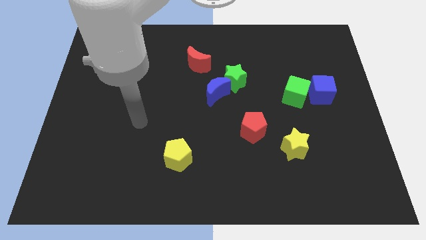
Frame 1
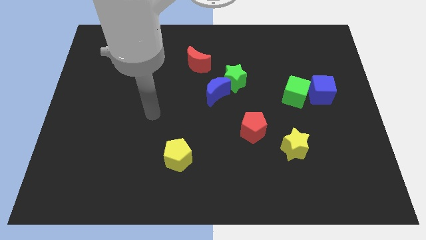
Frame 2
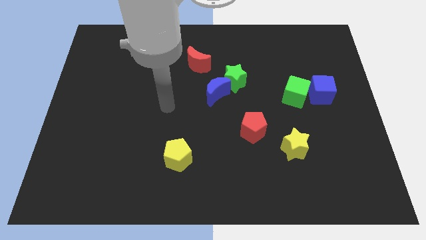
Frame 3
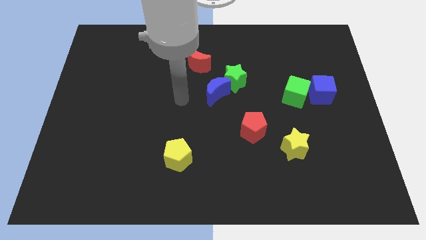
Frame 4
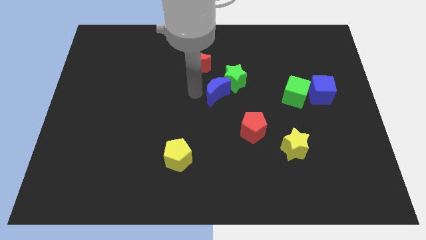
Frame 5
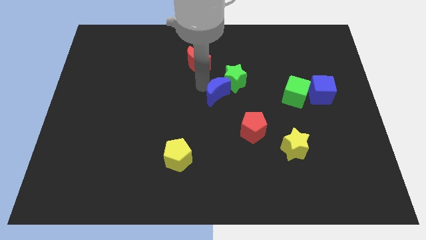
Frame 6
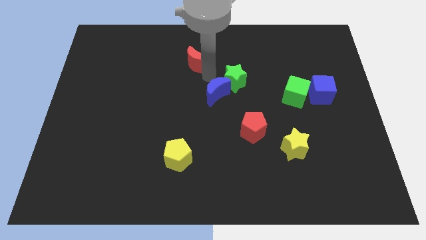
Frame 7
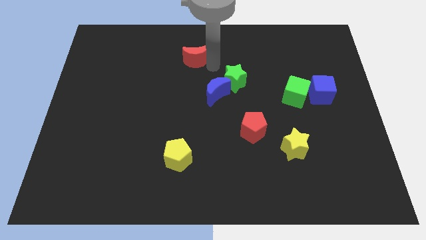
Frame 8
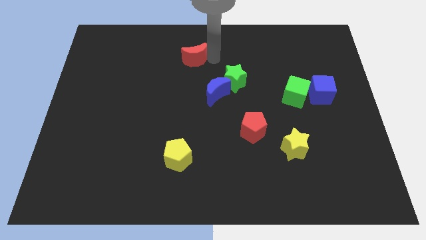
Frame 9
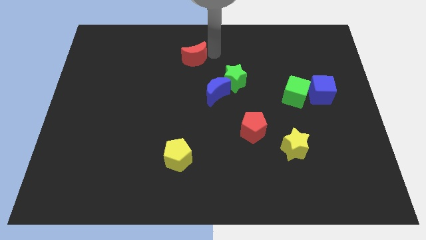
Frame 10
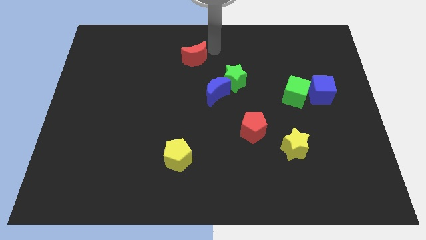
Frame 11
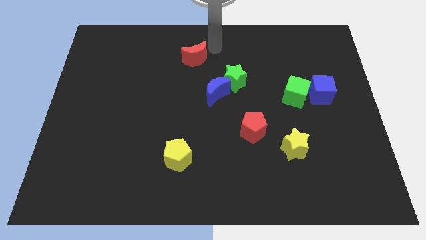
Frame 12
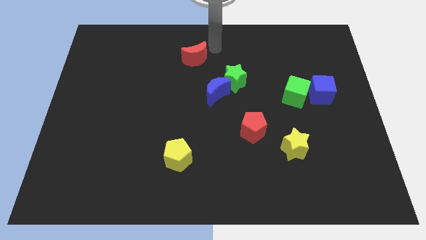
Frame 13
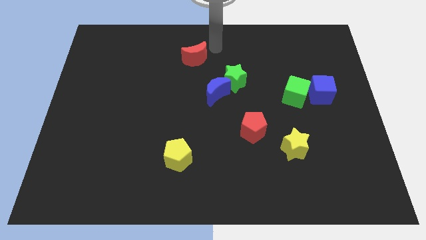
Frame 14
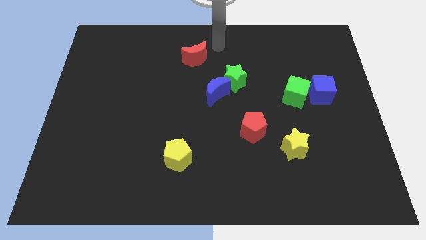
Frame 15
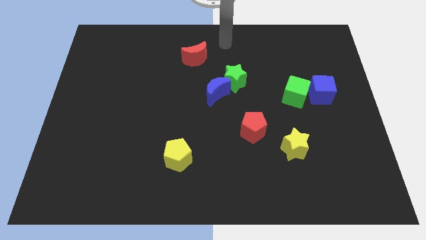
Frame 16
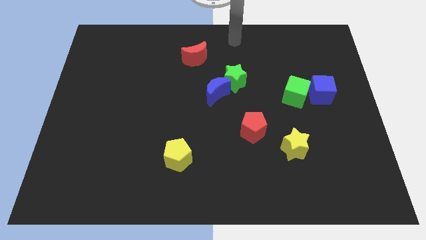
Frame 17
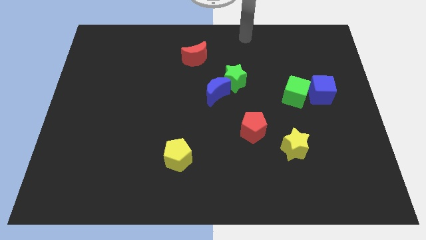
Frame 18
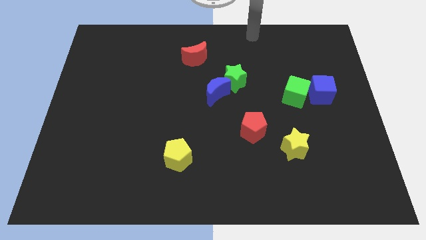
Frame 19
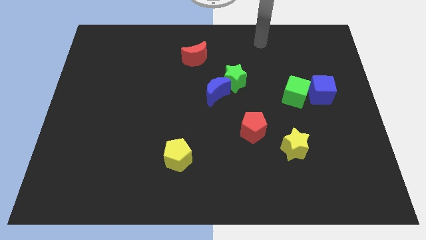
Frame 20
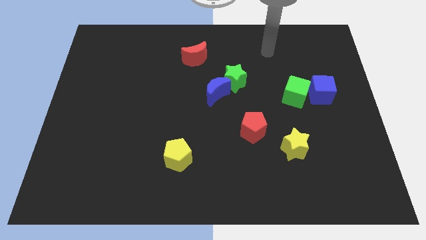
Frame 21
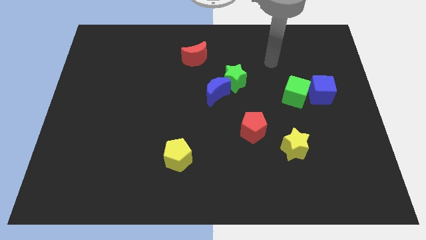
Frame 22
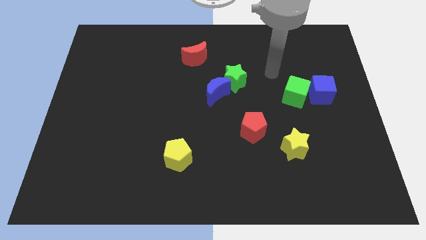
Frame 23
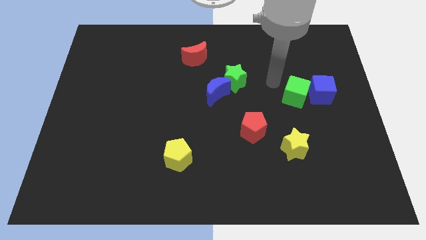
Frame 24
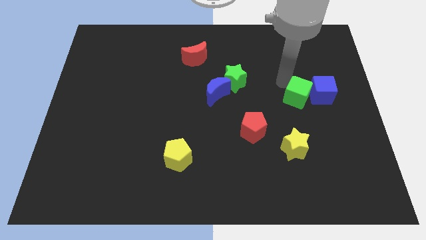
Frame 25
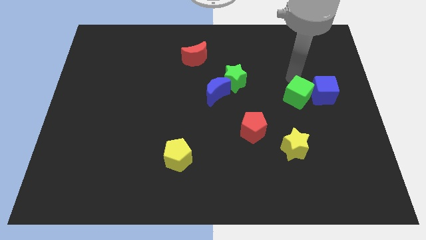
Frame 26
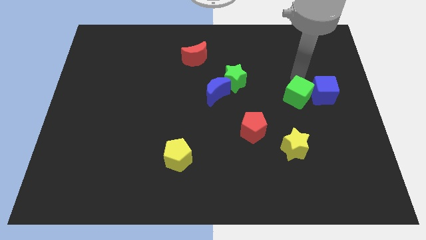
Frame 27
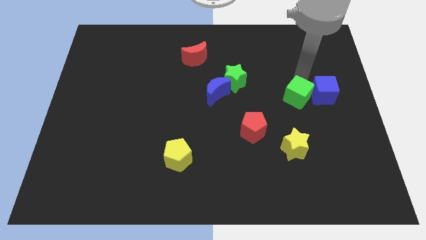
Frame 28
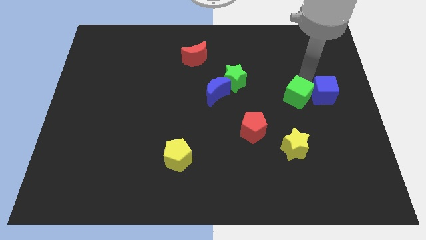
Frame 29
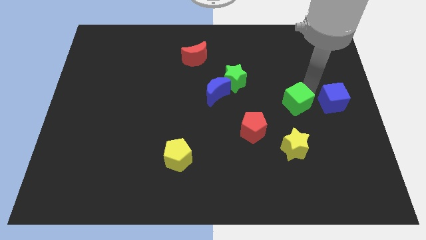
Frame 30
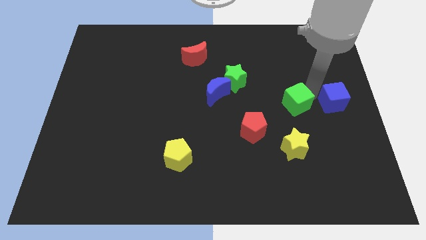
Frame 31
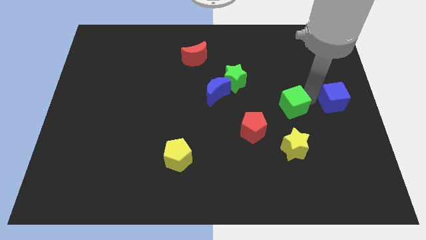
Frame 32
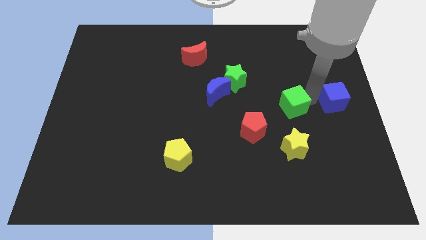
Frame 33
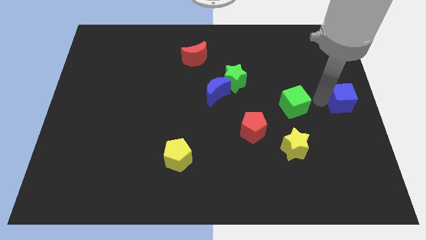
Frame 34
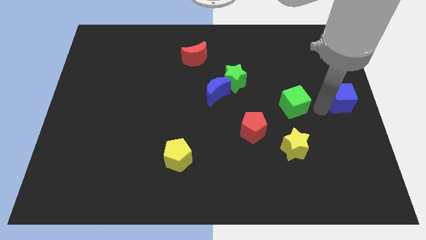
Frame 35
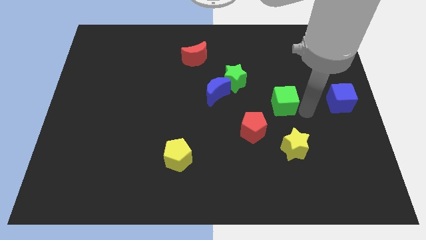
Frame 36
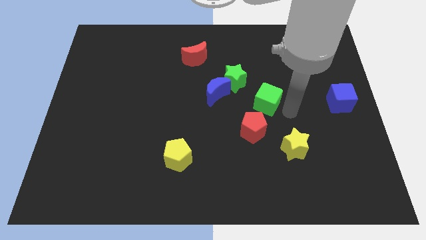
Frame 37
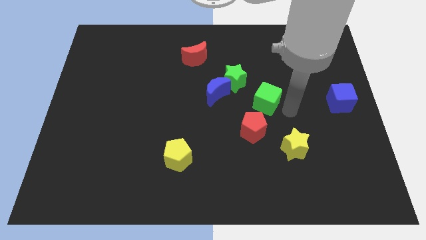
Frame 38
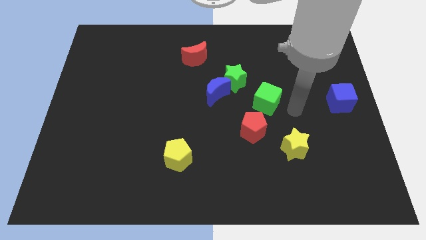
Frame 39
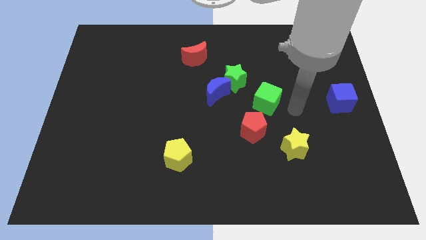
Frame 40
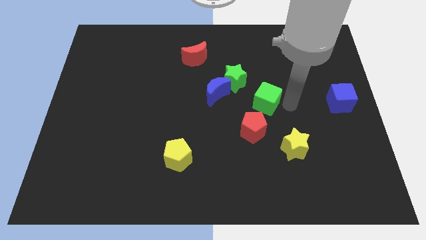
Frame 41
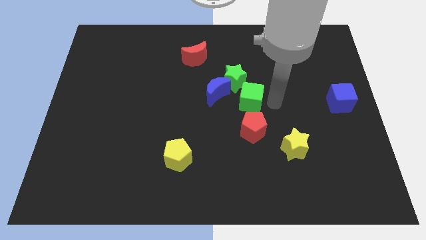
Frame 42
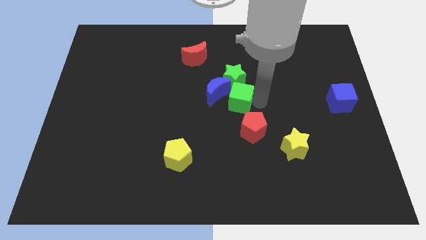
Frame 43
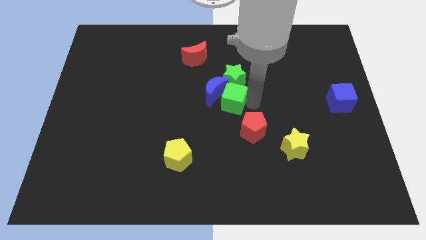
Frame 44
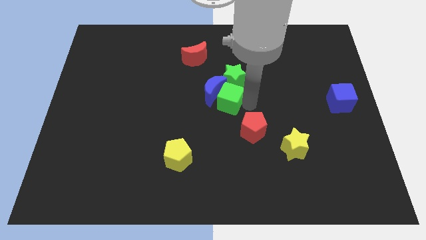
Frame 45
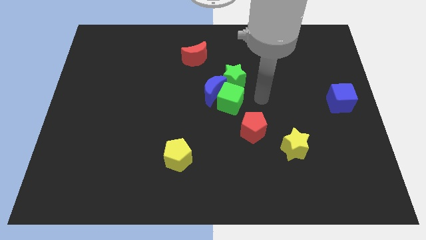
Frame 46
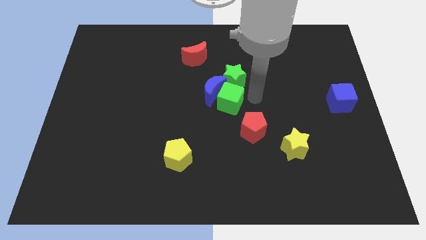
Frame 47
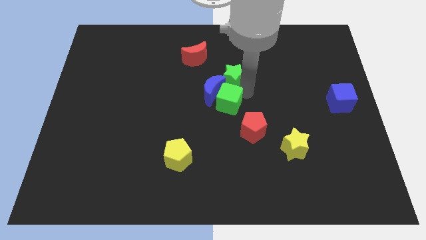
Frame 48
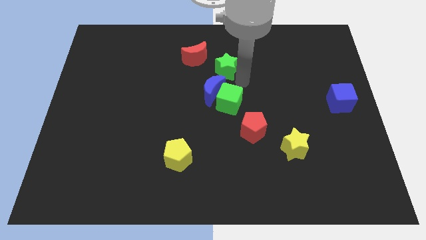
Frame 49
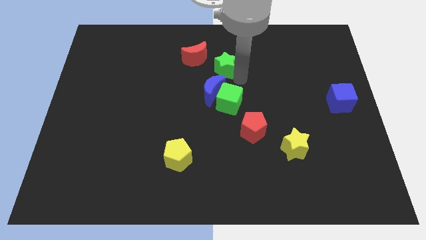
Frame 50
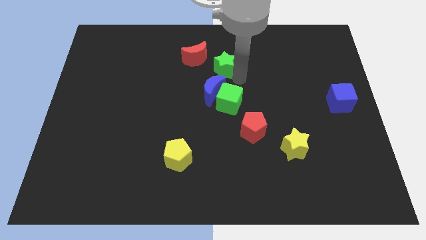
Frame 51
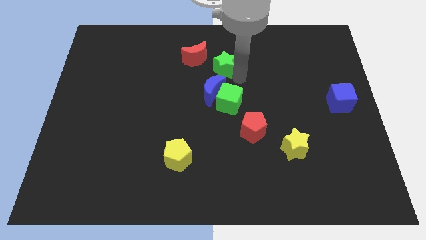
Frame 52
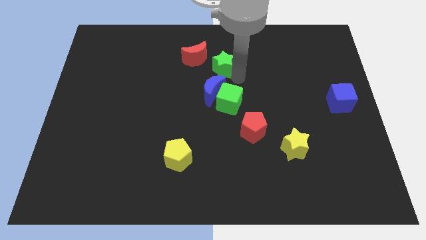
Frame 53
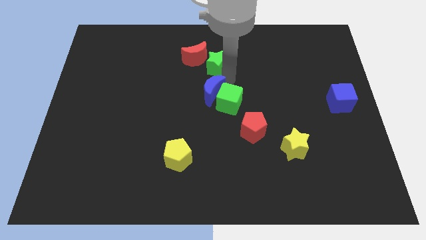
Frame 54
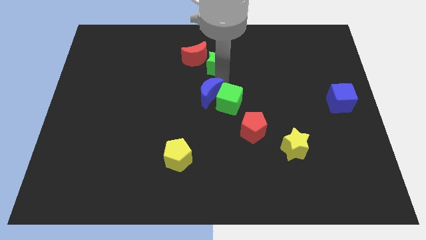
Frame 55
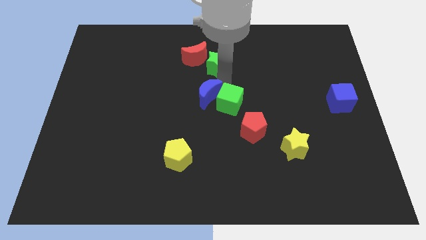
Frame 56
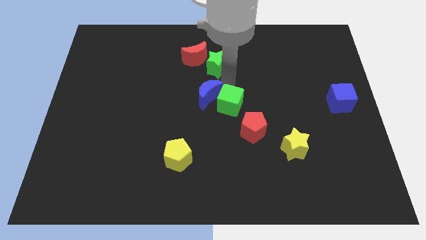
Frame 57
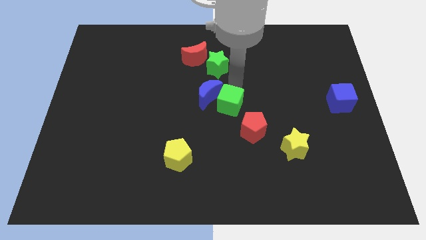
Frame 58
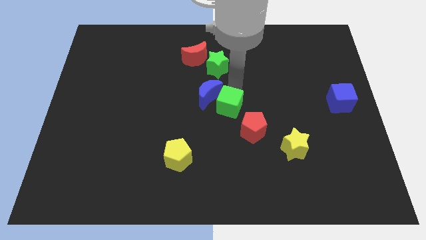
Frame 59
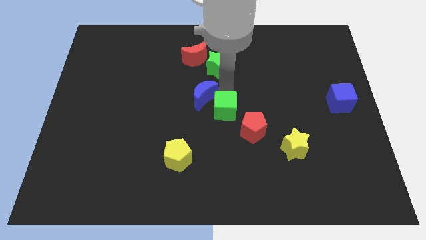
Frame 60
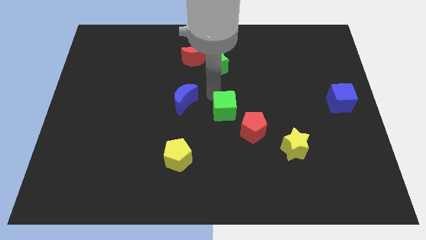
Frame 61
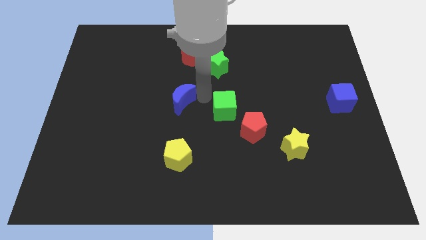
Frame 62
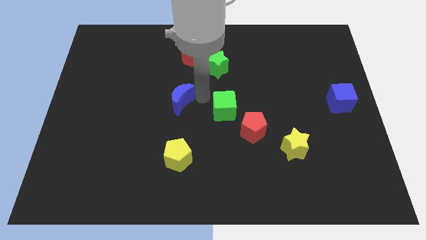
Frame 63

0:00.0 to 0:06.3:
place the green cube at the center of the board

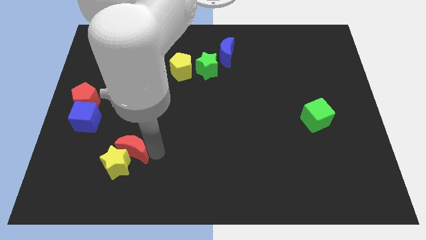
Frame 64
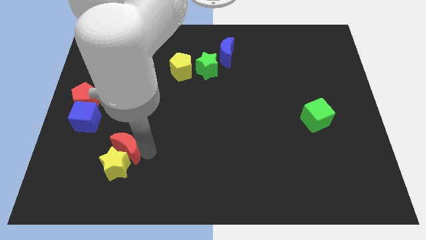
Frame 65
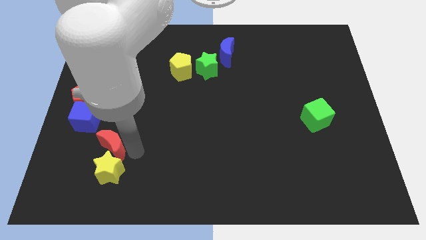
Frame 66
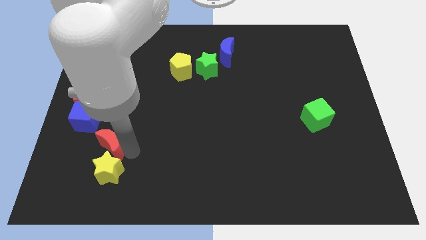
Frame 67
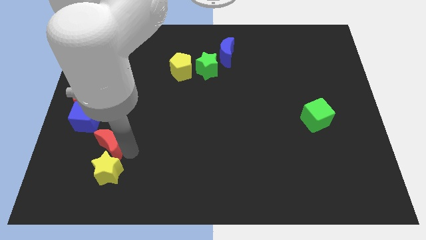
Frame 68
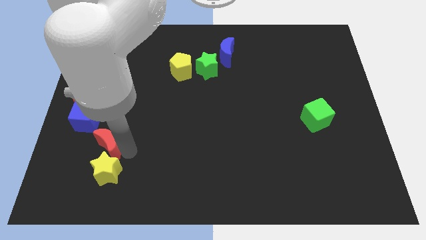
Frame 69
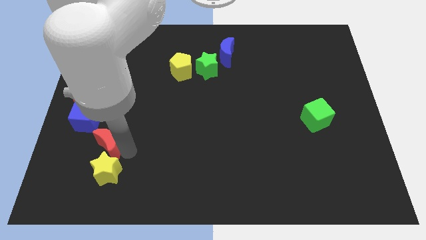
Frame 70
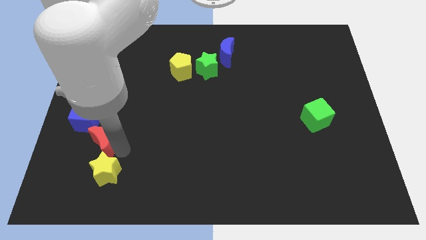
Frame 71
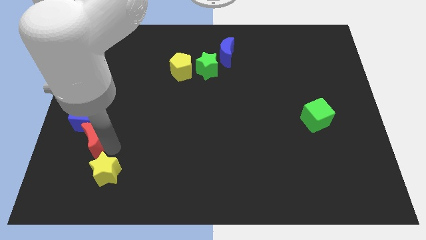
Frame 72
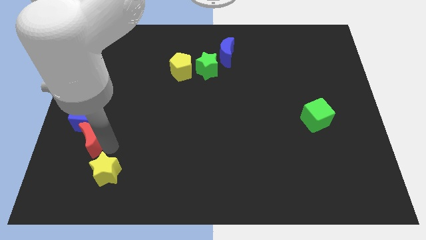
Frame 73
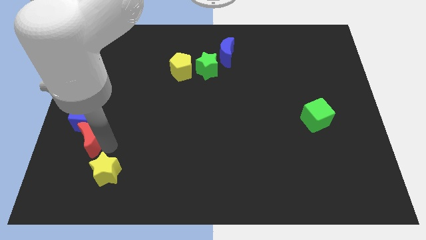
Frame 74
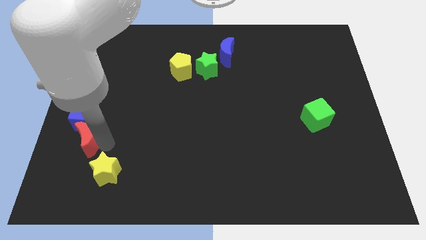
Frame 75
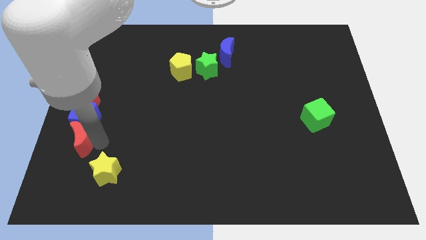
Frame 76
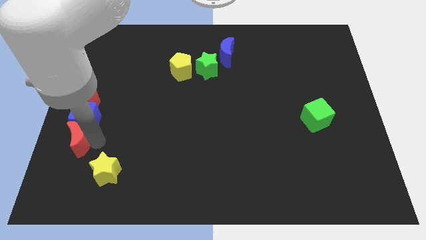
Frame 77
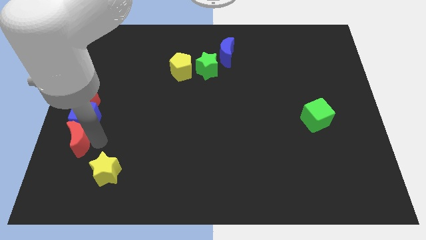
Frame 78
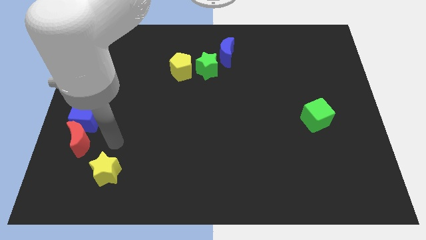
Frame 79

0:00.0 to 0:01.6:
push the red moon to the bottom side of the blue cube

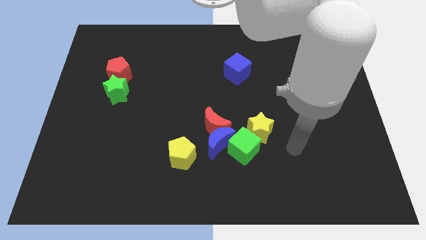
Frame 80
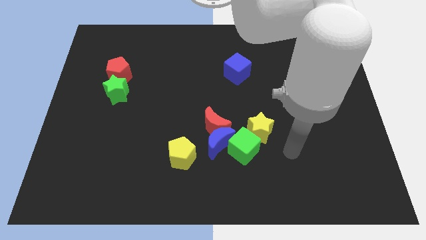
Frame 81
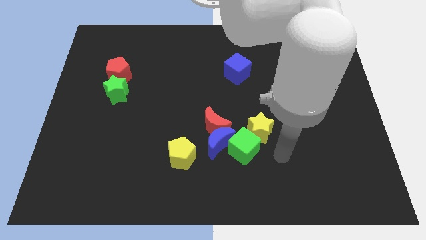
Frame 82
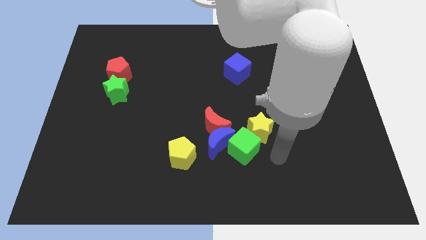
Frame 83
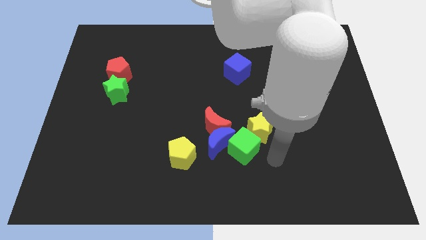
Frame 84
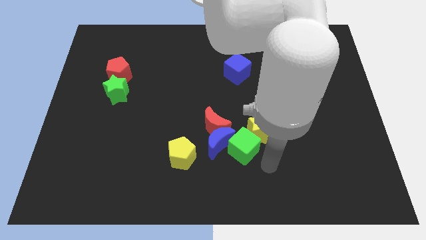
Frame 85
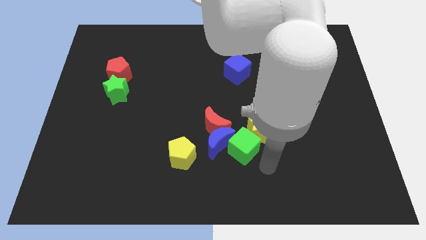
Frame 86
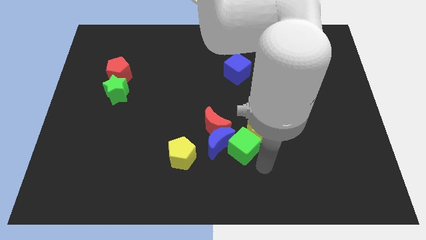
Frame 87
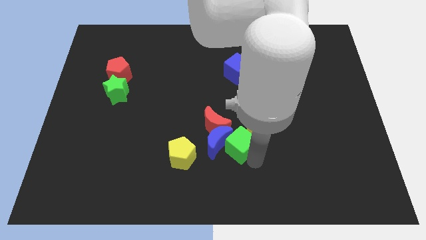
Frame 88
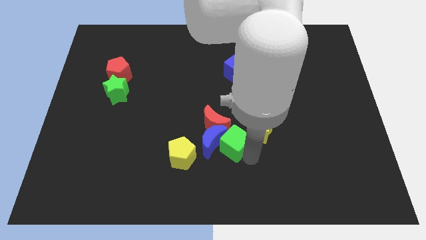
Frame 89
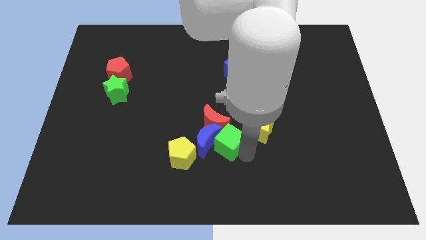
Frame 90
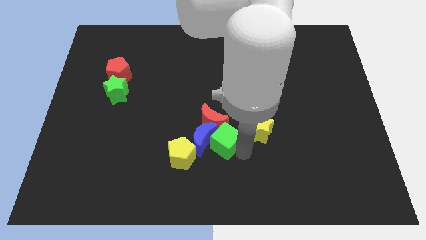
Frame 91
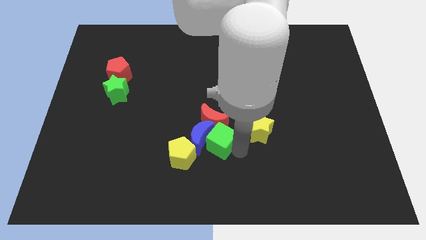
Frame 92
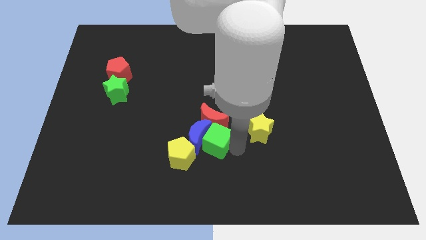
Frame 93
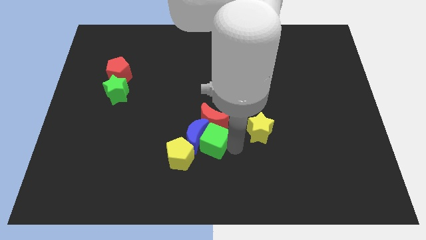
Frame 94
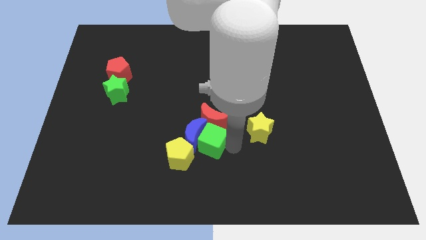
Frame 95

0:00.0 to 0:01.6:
place the green cube and blue moon in between the yellow pentagon and red moon
